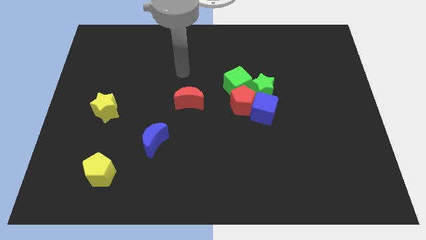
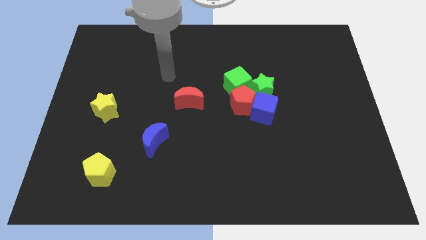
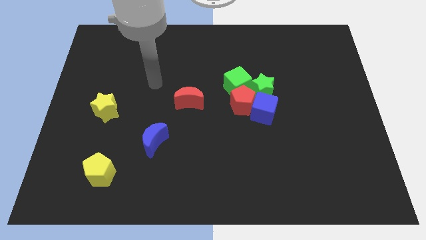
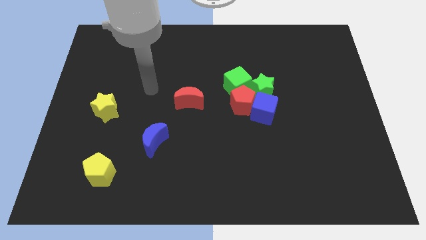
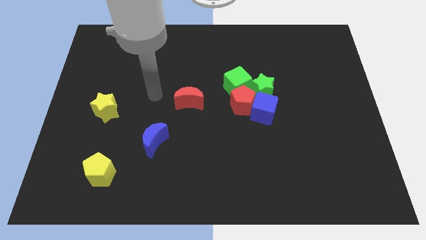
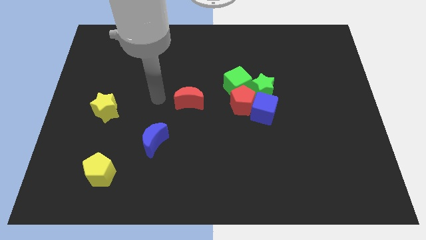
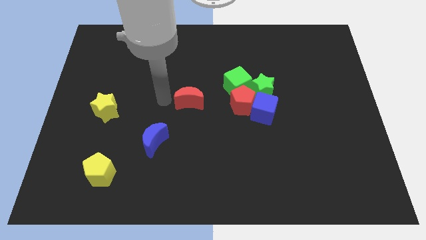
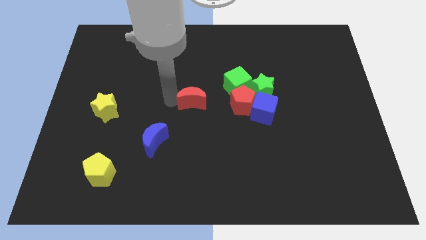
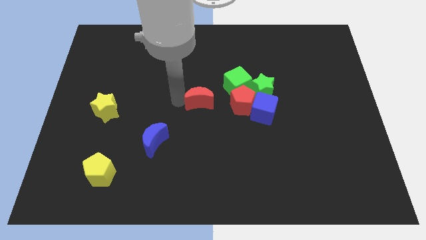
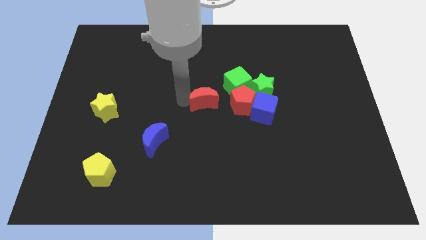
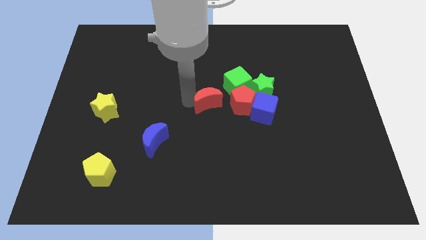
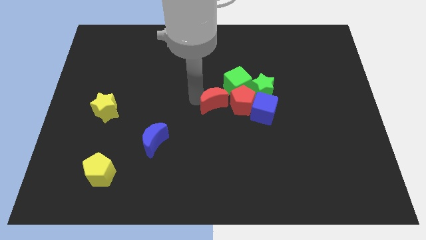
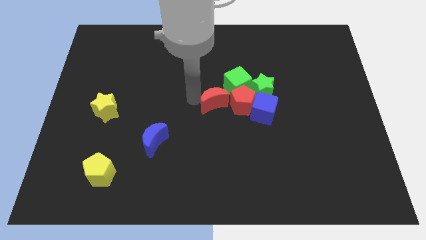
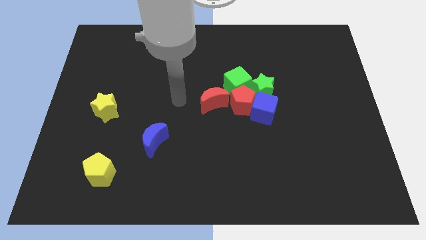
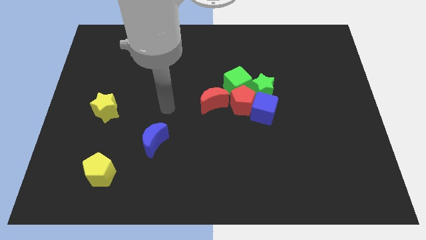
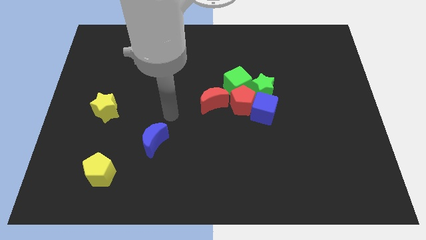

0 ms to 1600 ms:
push the red moon into the red pentagon to the left

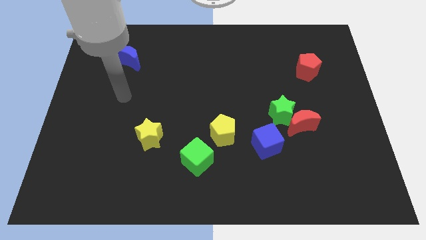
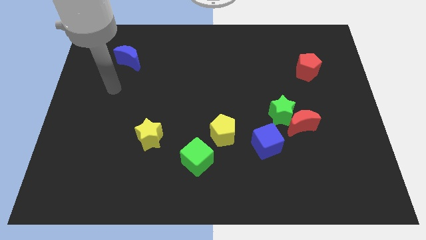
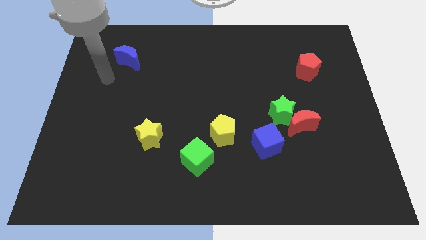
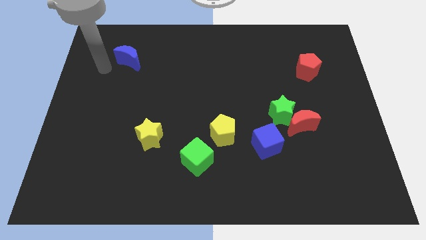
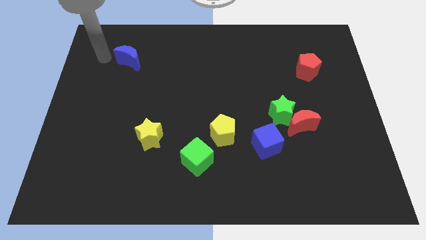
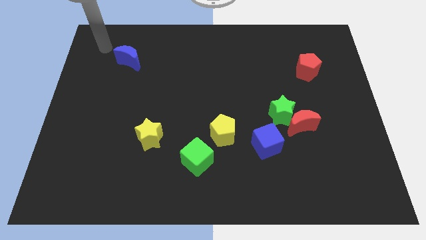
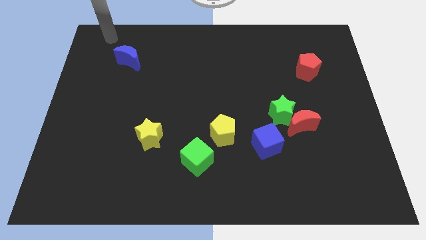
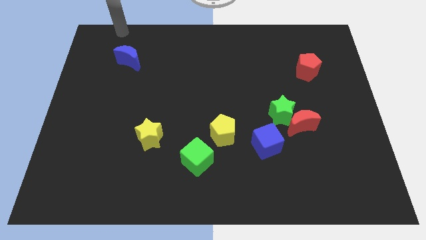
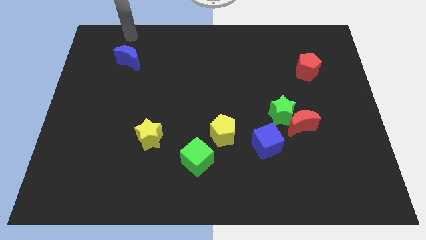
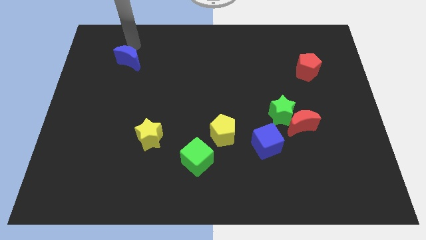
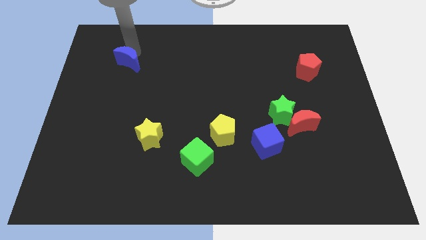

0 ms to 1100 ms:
put your hand above the blue moon

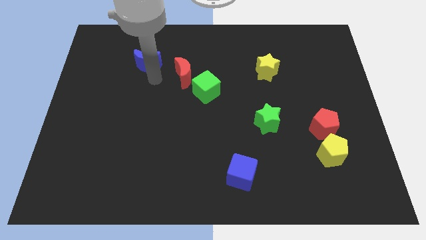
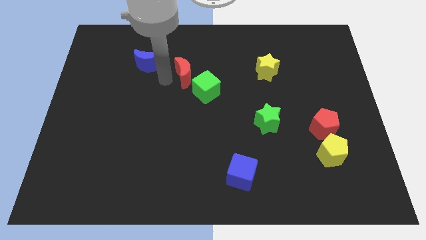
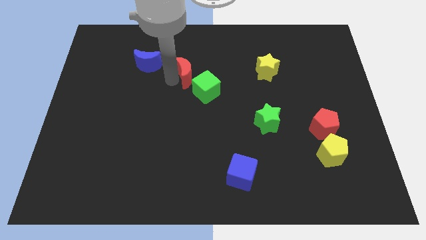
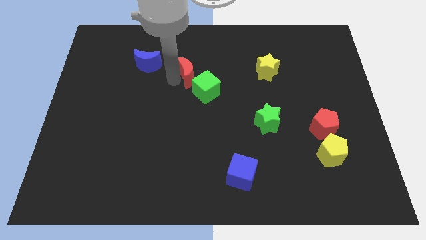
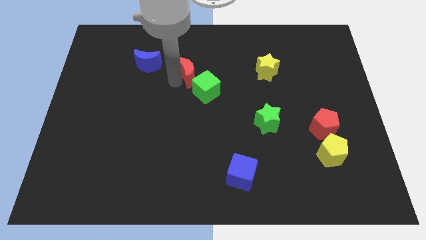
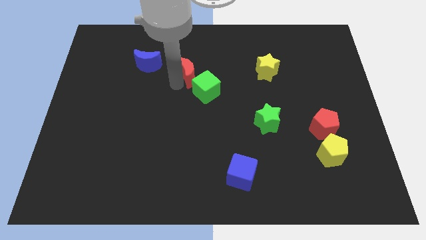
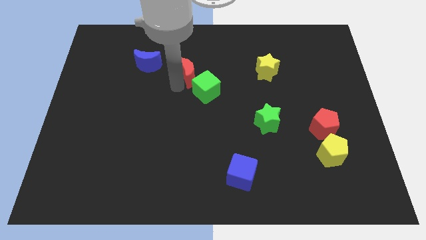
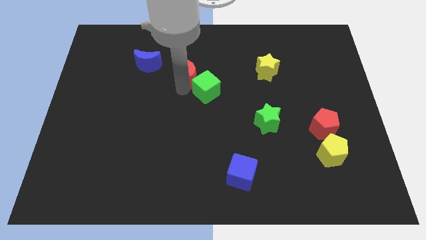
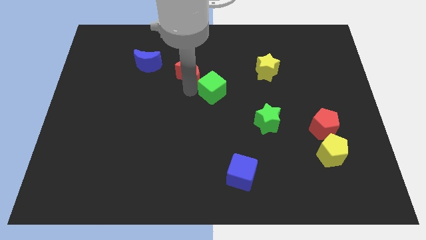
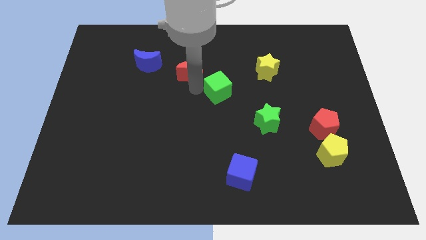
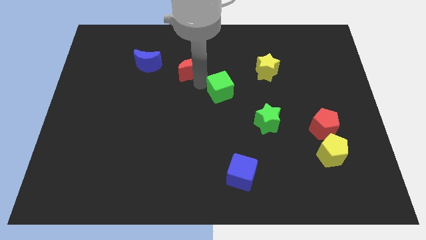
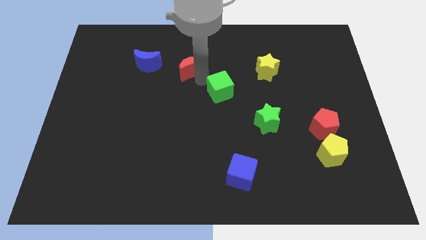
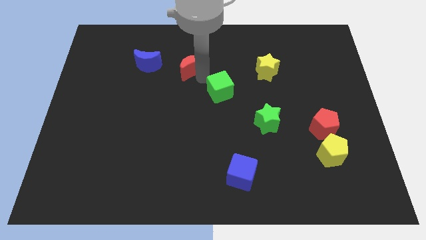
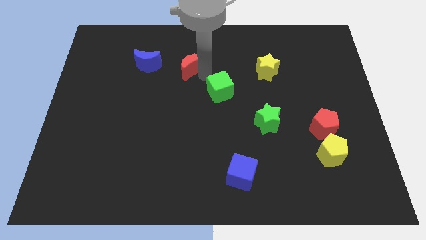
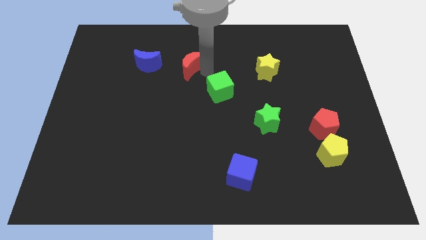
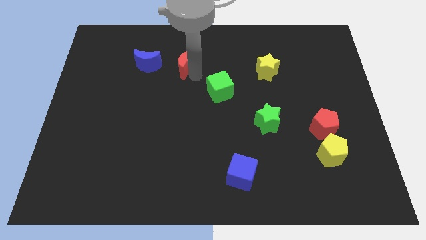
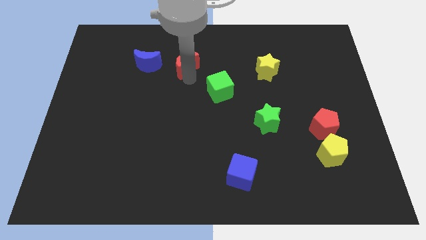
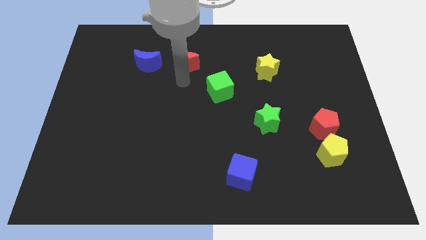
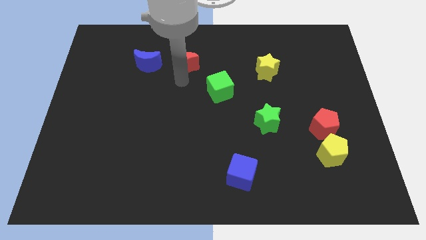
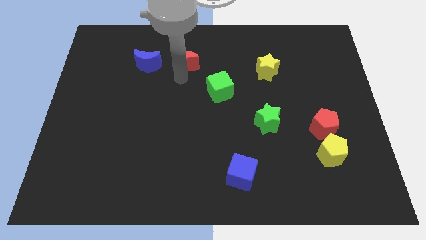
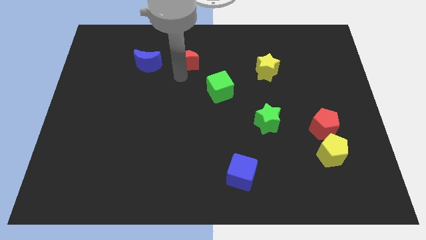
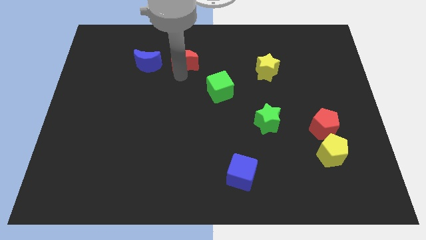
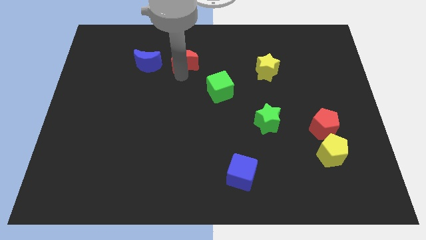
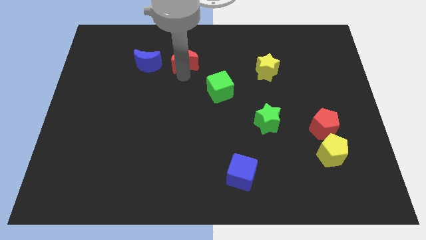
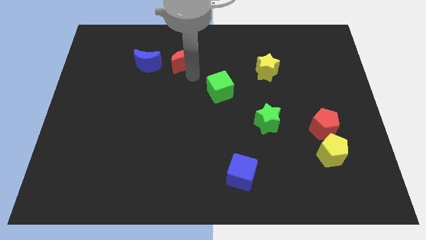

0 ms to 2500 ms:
push the red crescent to the right of the blue crescent

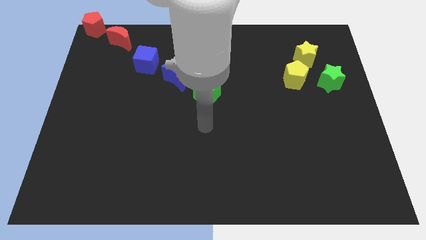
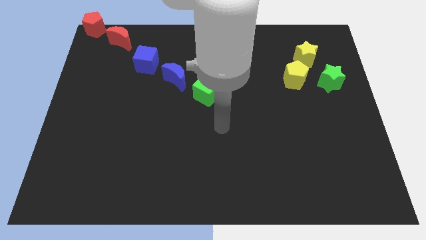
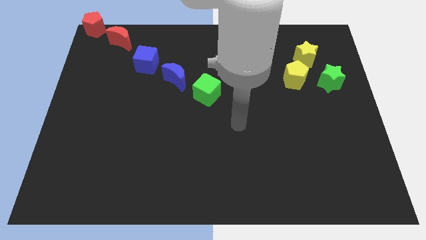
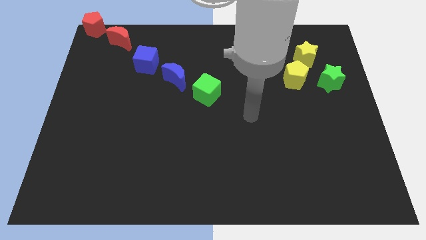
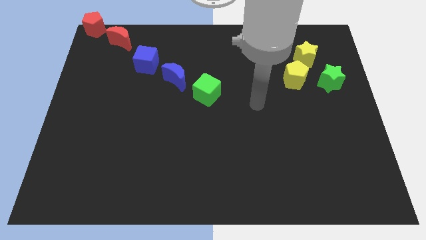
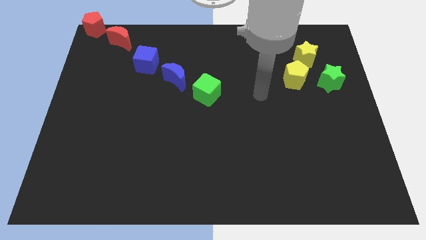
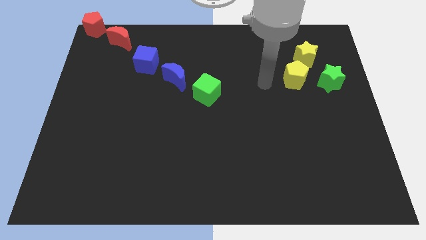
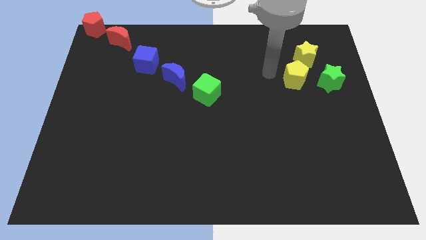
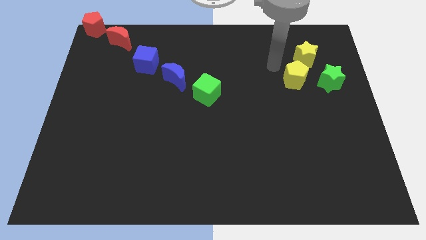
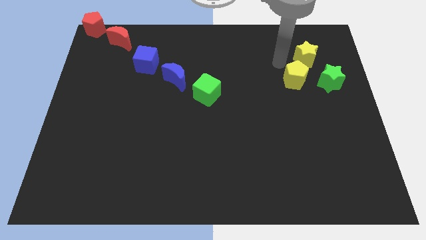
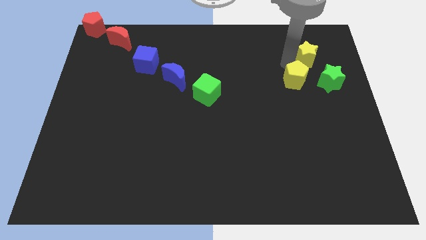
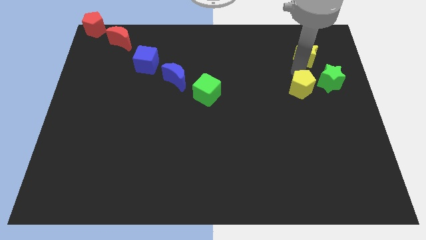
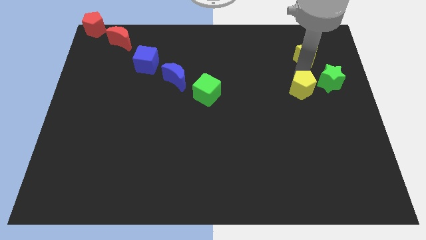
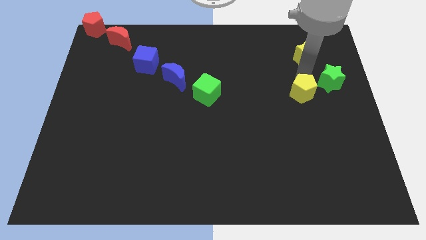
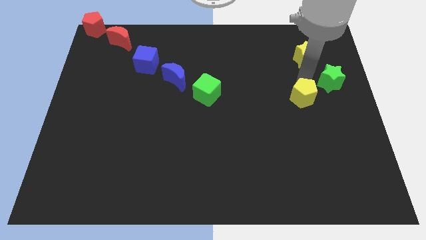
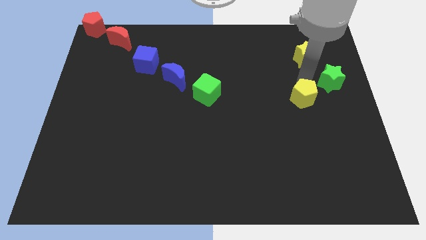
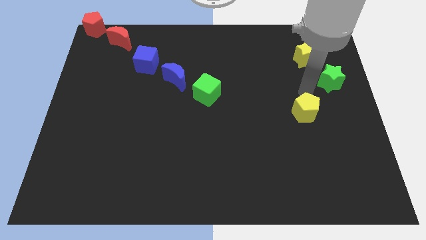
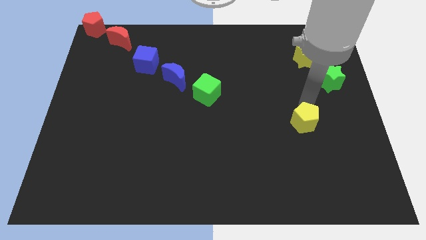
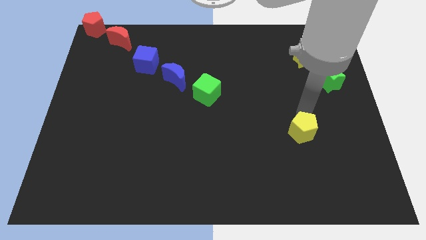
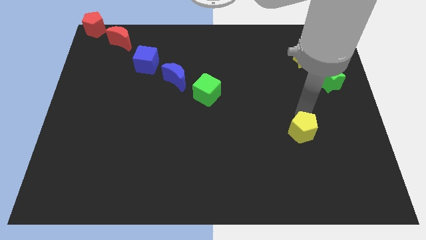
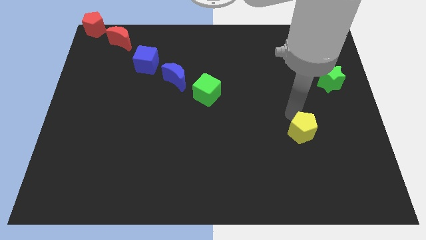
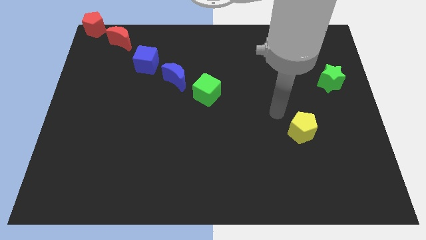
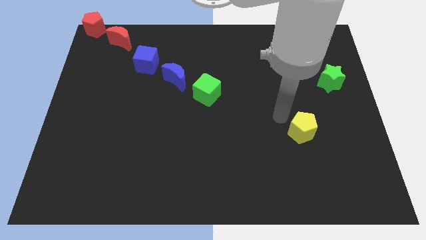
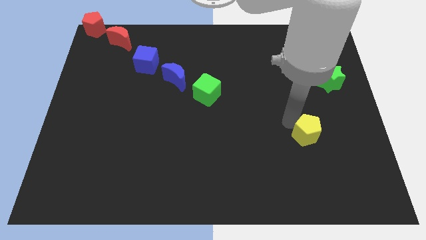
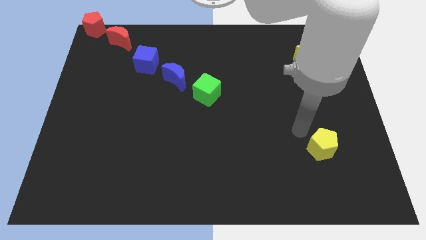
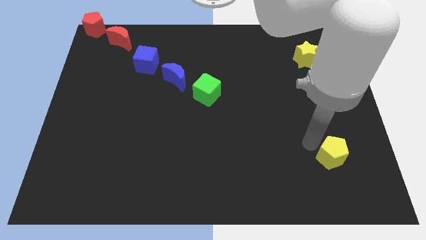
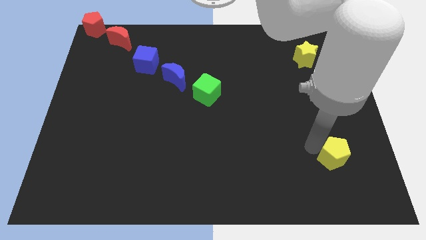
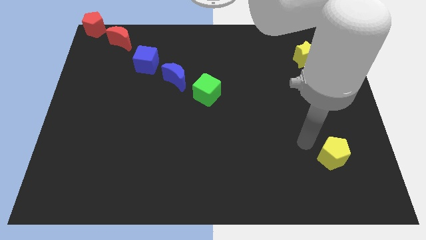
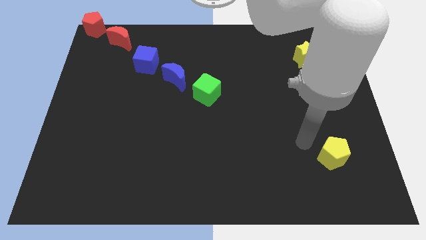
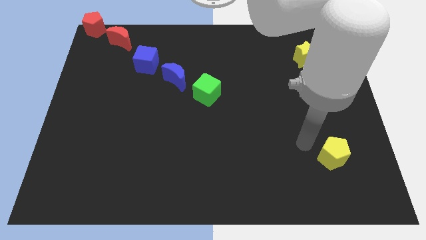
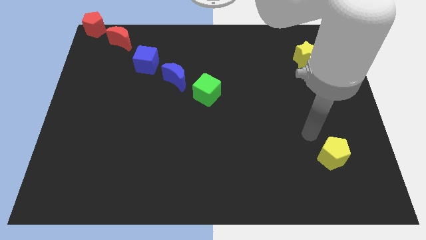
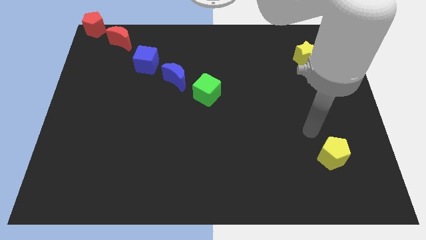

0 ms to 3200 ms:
place the yellow pentagon below the green star

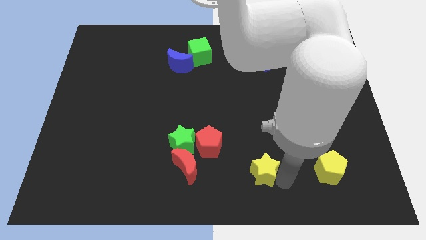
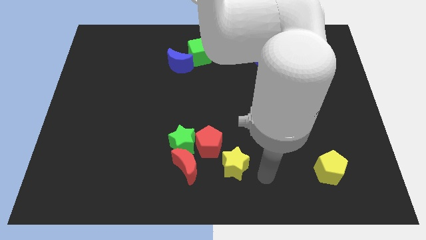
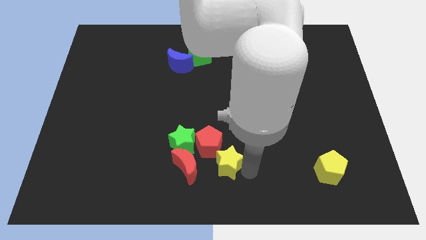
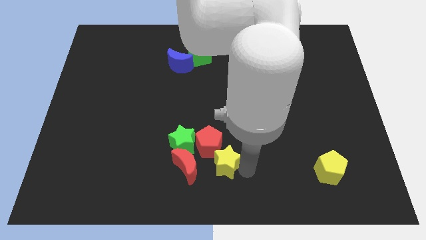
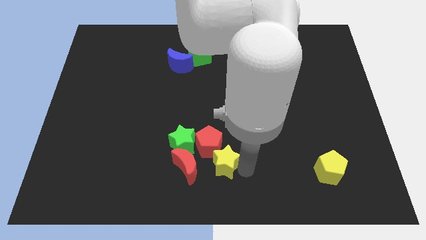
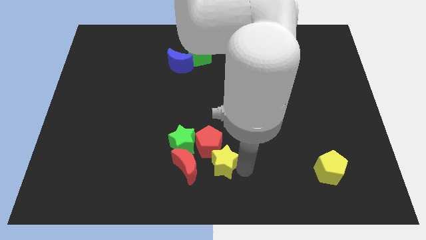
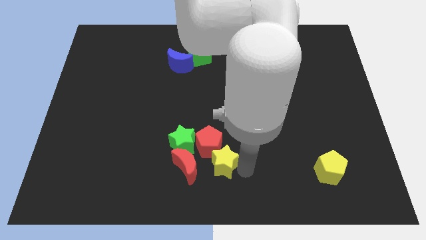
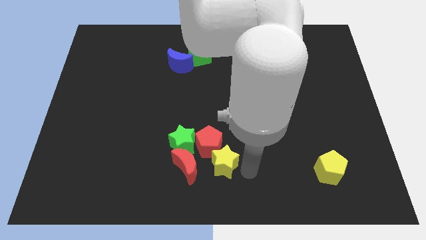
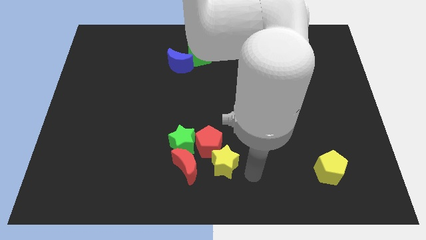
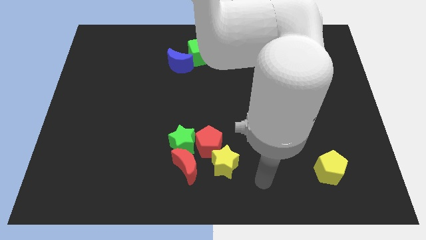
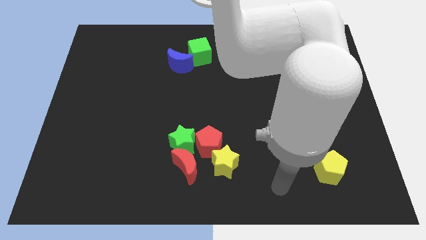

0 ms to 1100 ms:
place yellow star to the bottom of red pentagon
